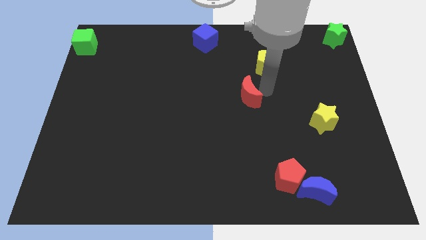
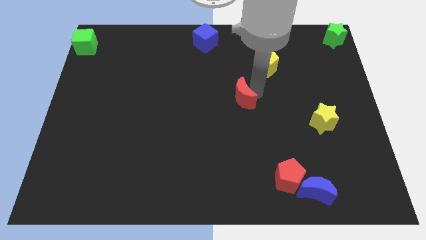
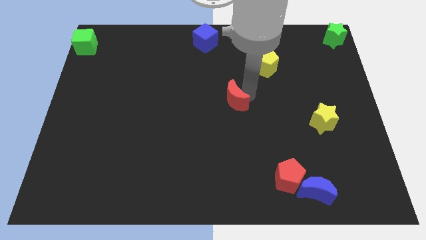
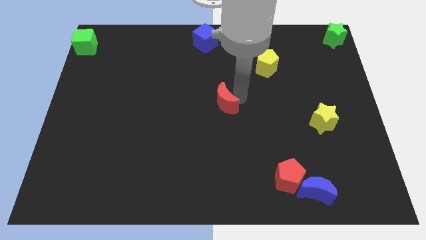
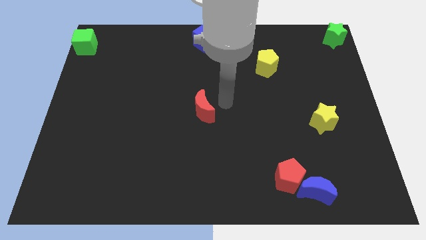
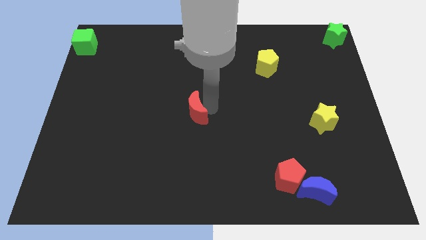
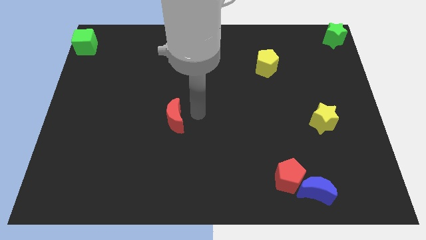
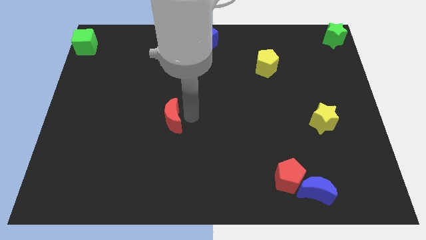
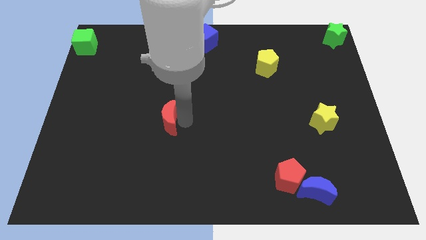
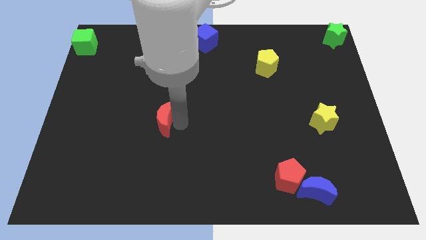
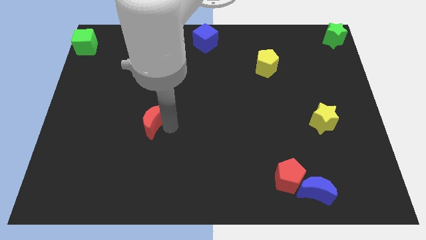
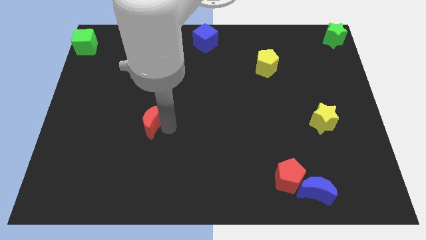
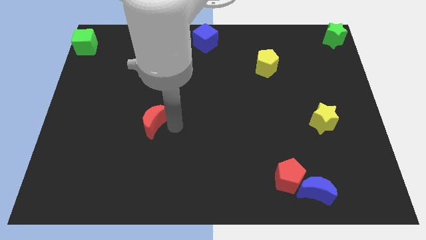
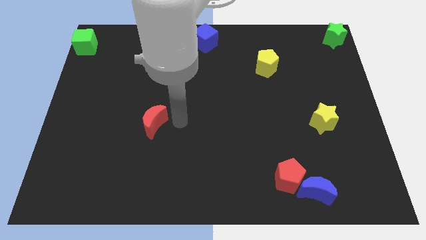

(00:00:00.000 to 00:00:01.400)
push red crescent to the left bottom of the board

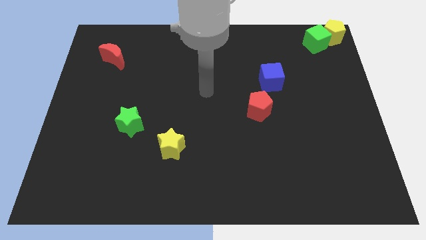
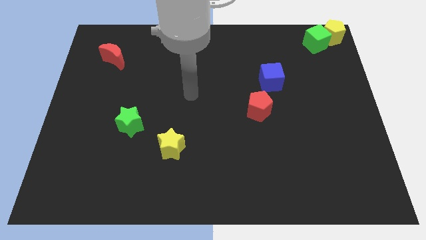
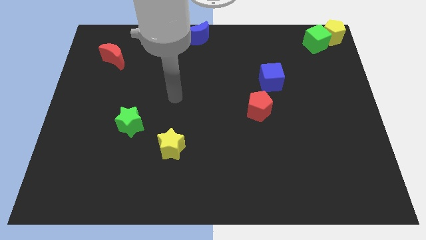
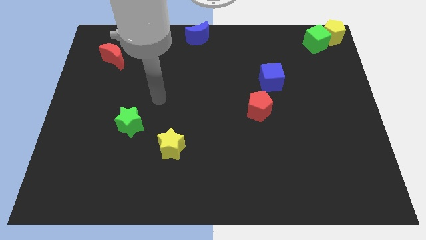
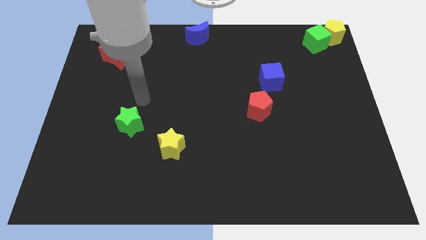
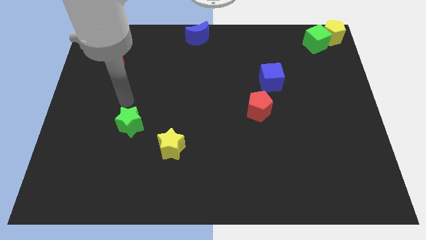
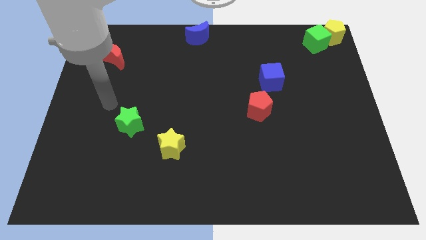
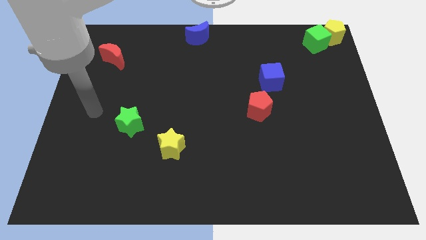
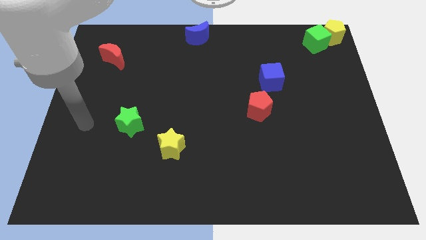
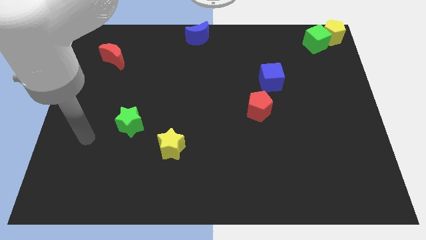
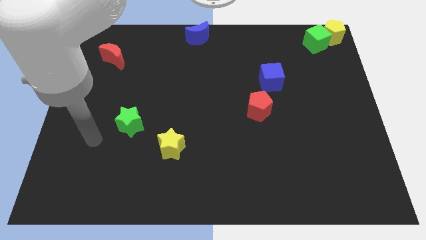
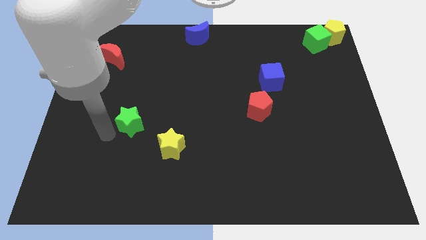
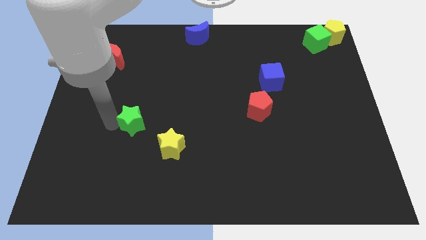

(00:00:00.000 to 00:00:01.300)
move your arm towards the green star

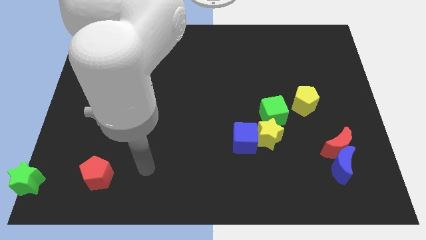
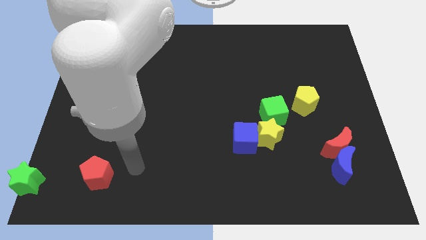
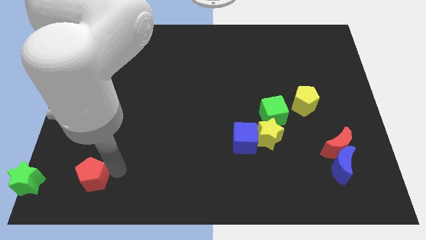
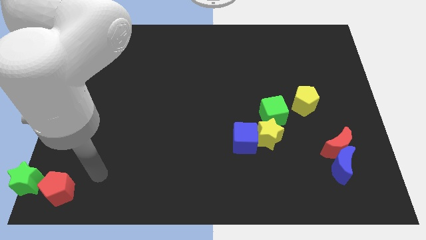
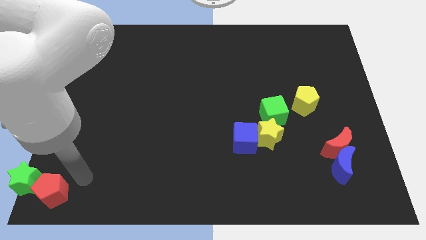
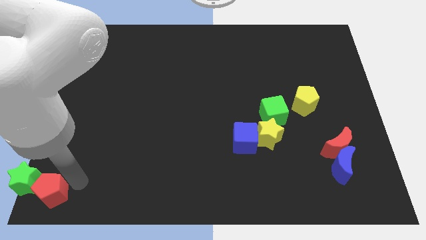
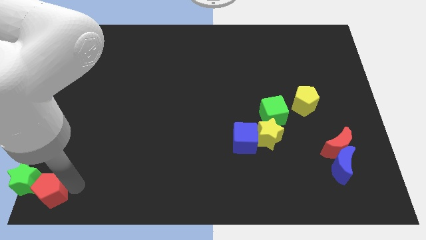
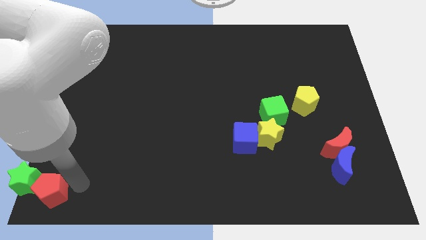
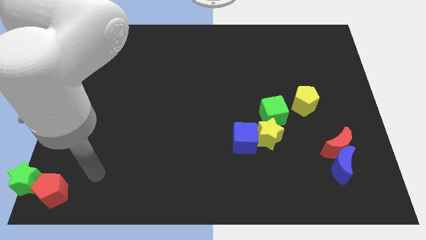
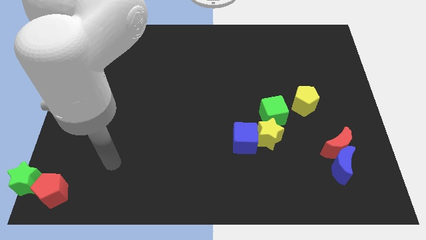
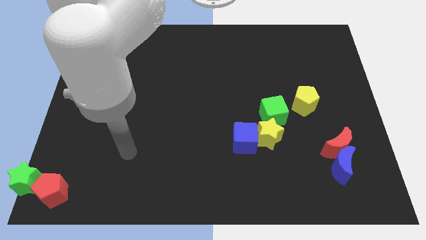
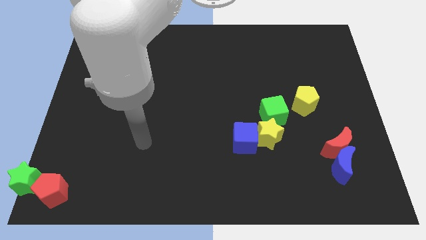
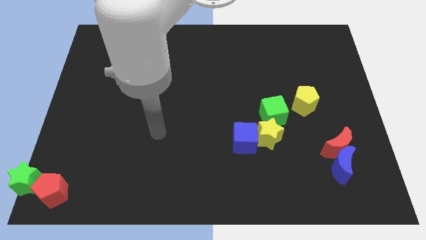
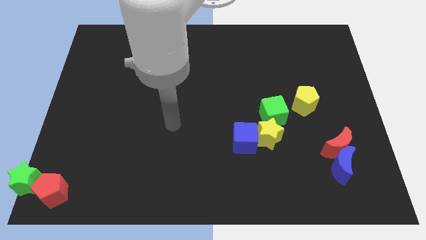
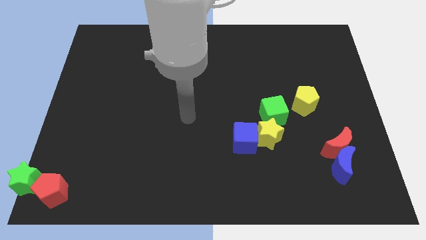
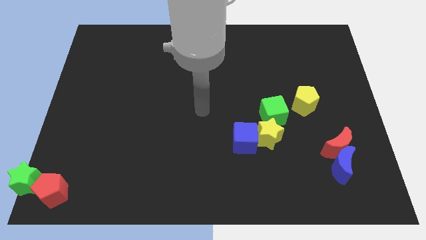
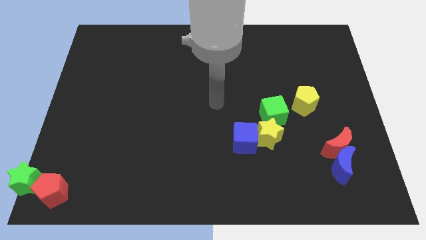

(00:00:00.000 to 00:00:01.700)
place the red pentagon to the right side of the green star

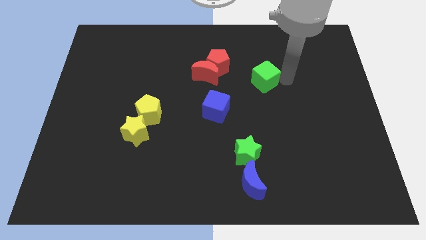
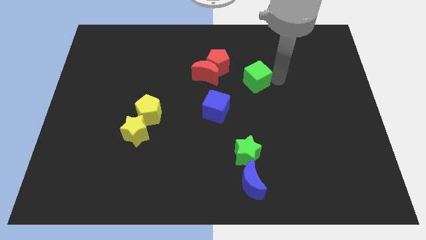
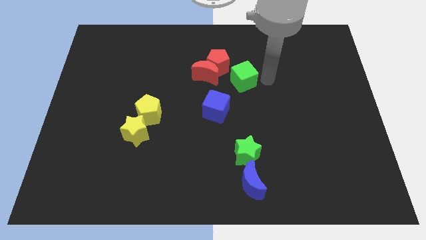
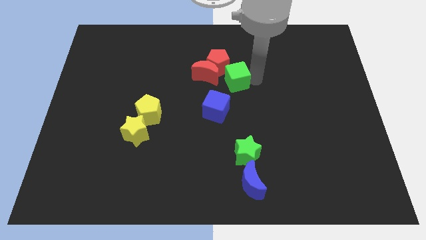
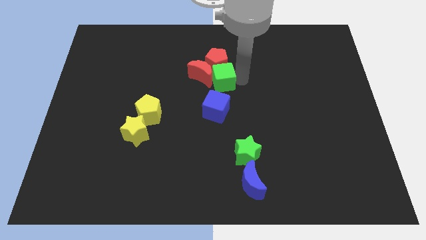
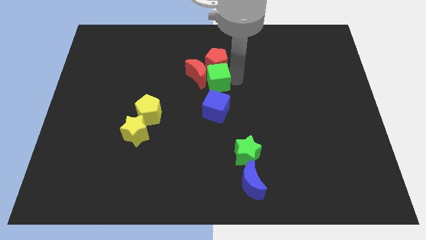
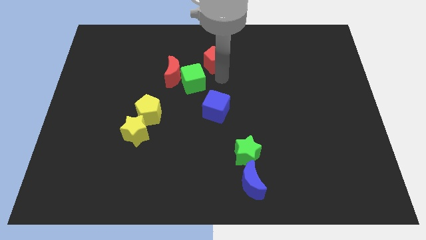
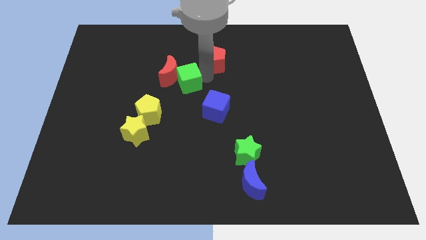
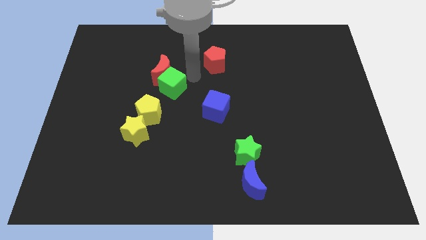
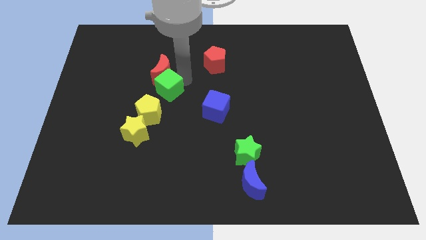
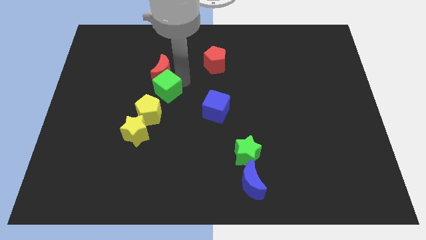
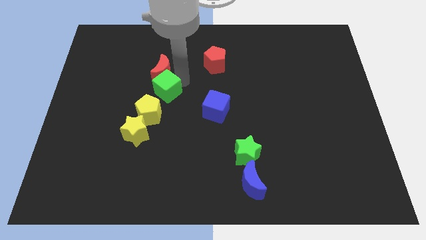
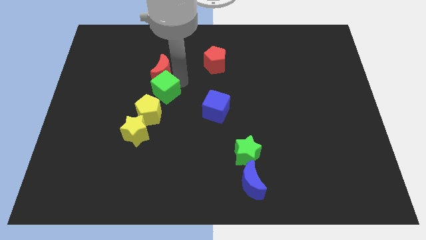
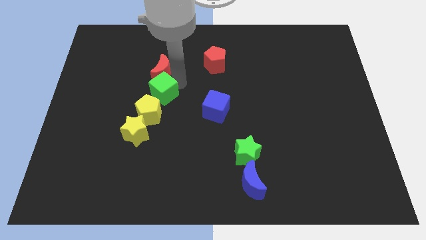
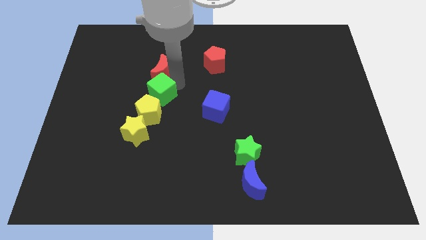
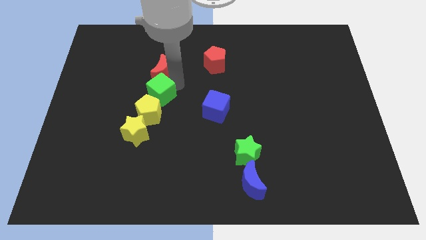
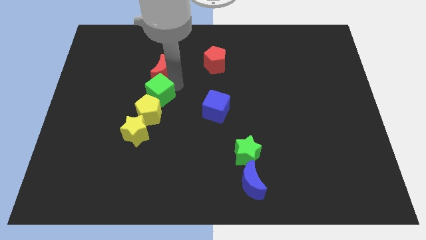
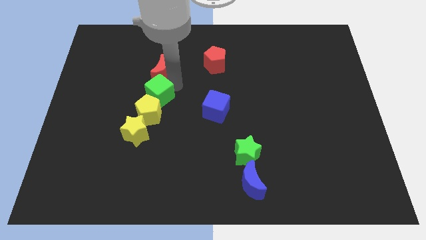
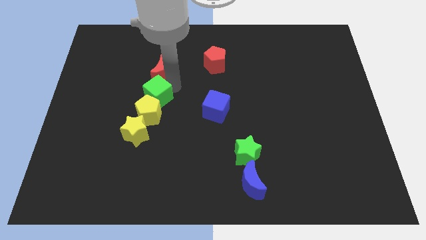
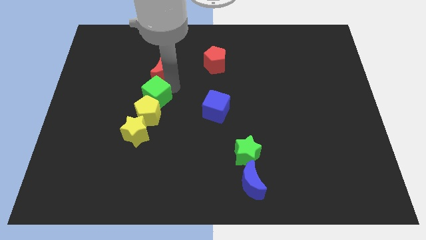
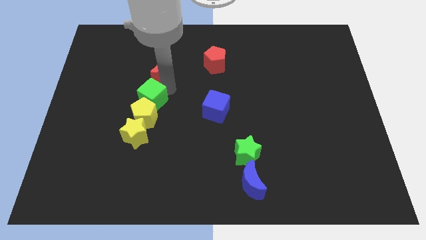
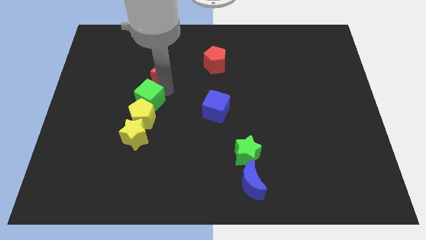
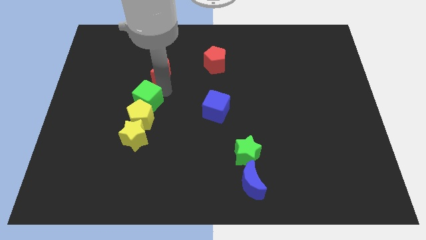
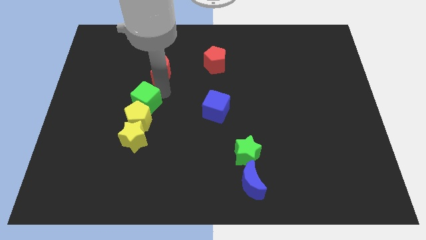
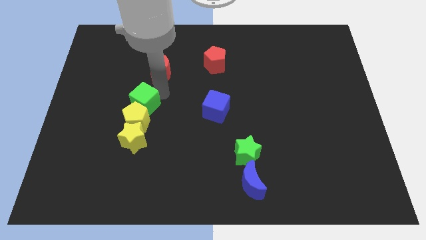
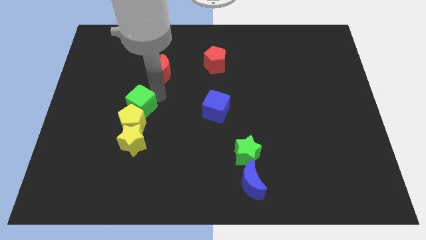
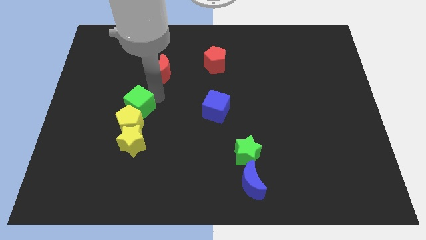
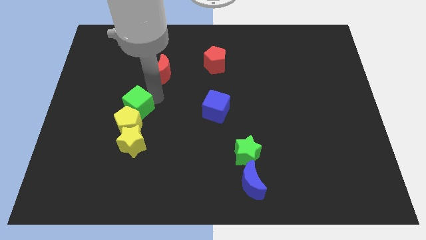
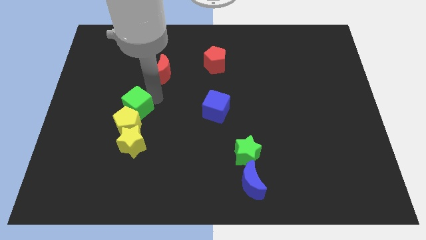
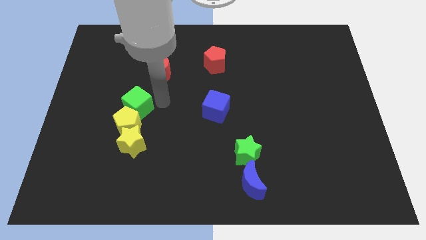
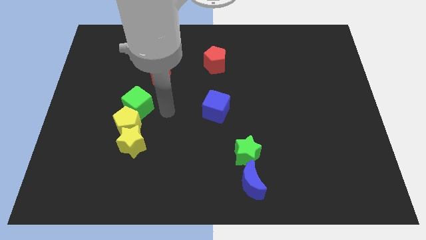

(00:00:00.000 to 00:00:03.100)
move the green cube into the yellow pentagon and push downwards

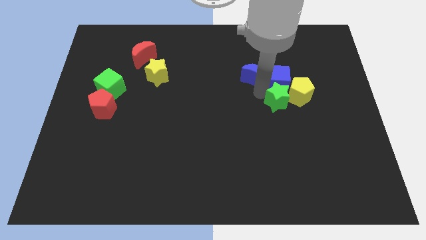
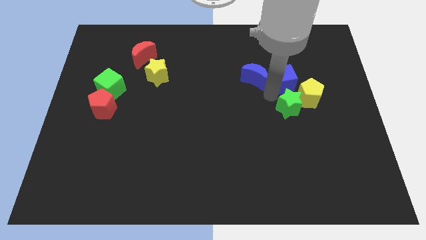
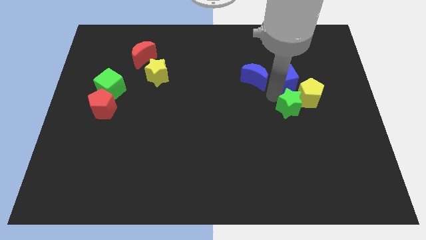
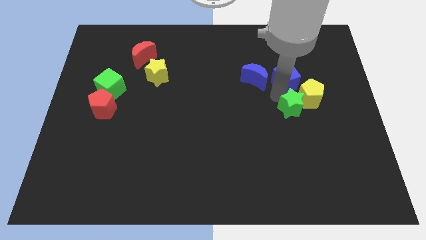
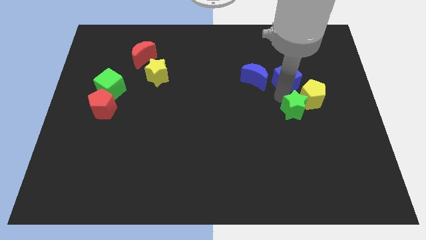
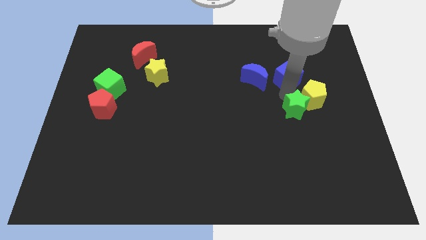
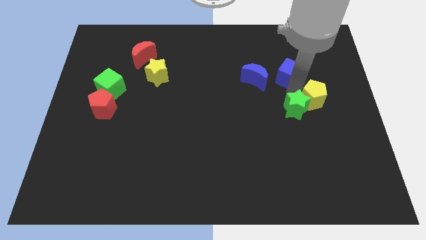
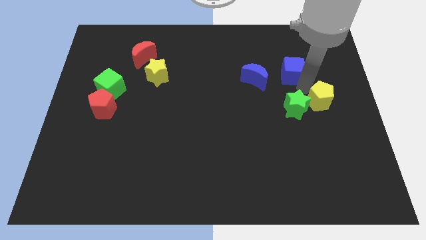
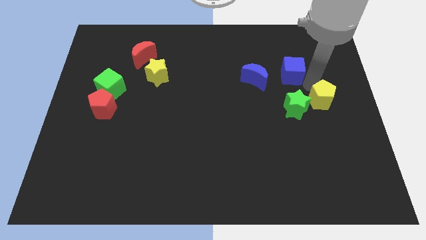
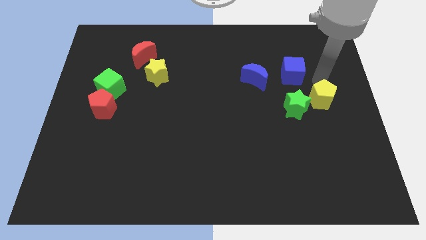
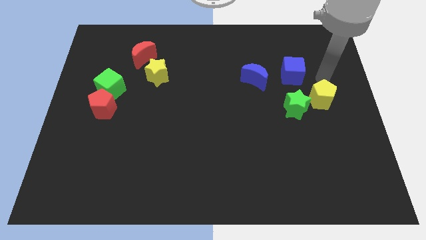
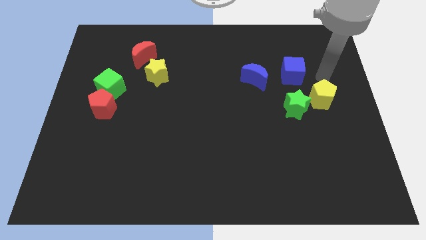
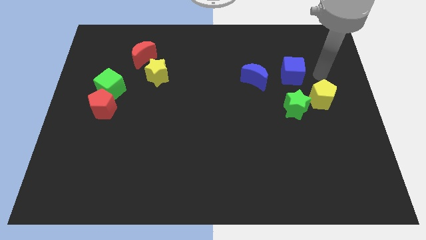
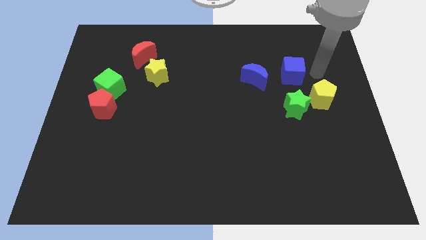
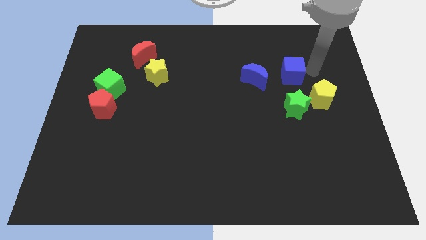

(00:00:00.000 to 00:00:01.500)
separate the blue blocks

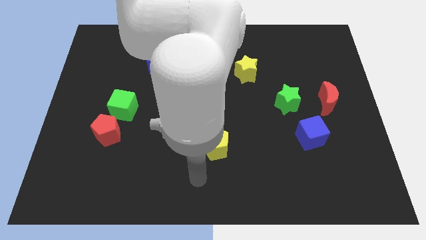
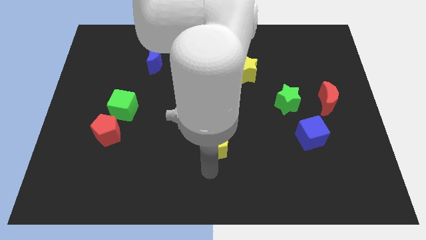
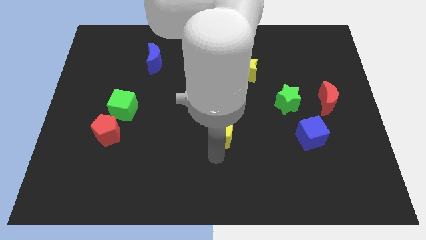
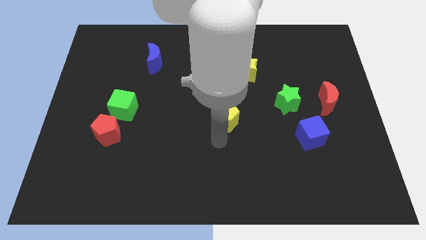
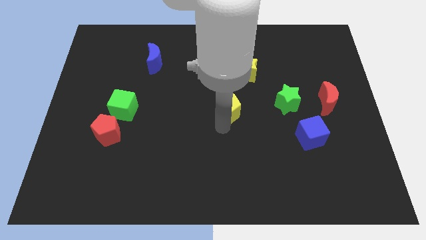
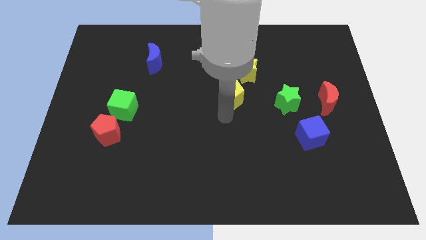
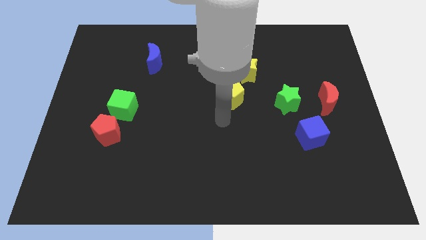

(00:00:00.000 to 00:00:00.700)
place yellow pentagon below yellow star
